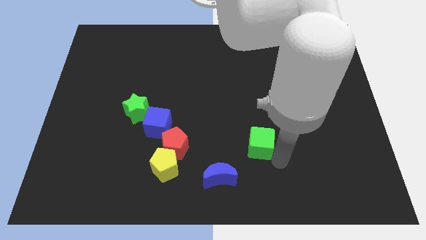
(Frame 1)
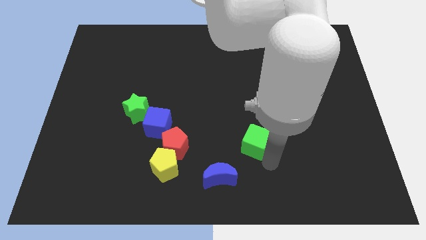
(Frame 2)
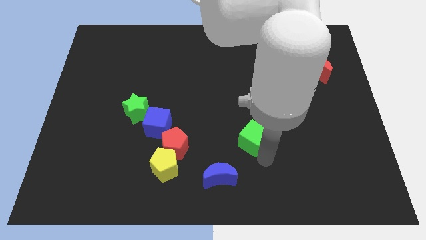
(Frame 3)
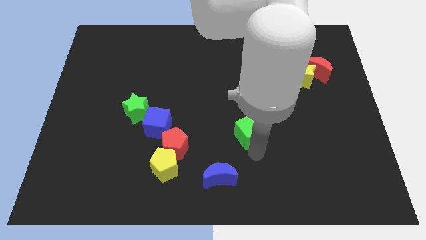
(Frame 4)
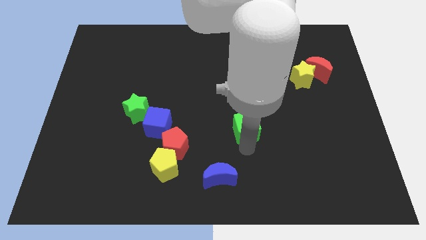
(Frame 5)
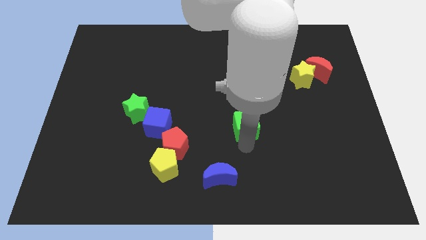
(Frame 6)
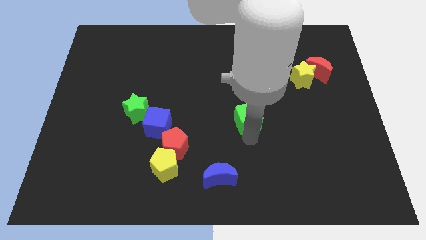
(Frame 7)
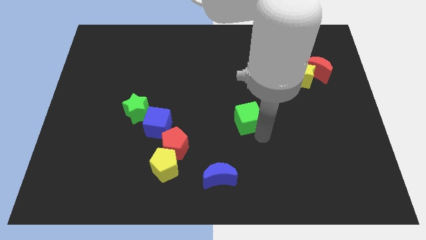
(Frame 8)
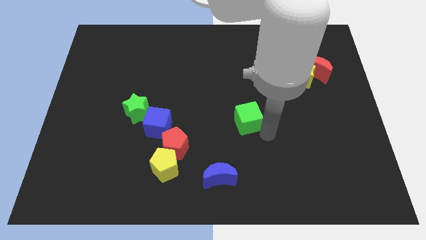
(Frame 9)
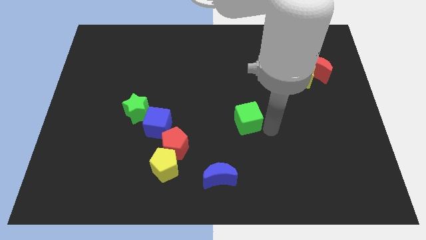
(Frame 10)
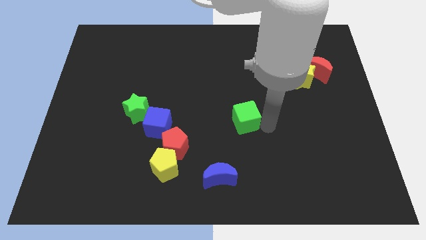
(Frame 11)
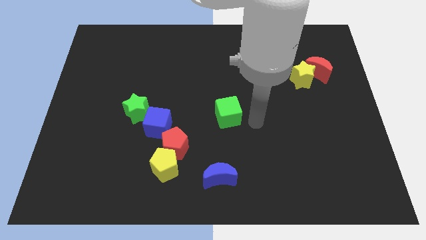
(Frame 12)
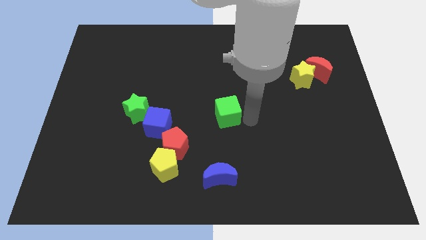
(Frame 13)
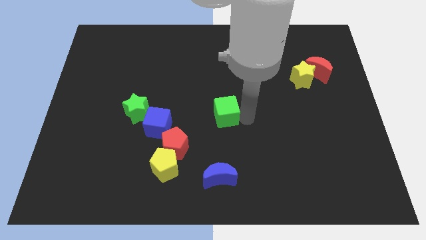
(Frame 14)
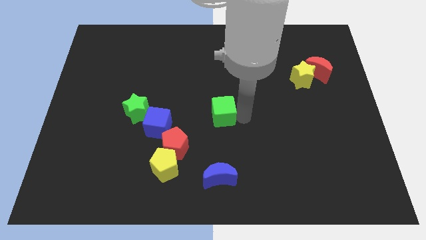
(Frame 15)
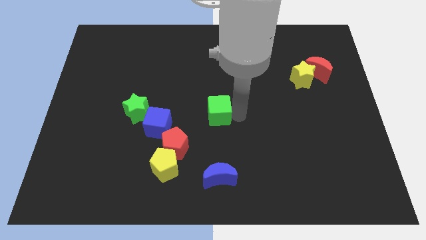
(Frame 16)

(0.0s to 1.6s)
place the green cube above the blue moon

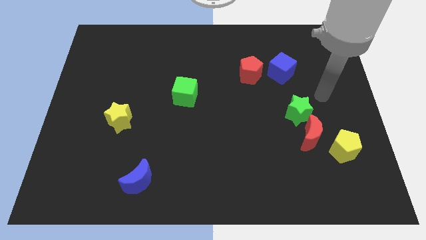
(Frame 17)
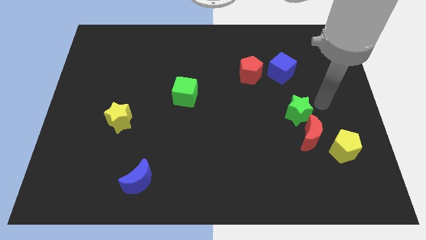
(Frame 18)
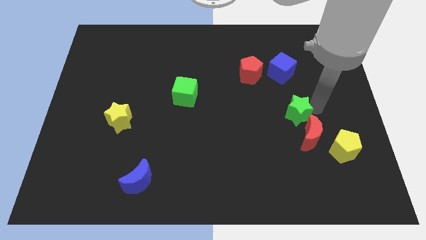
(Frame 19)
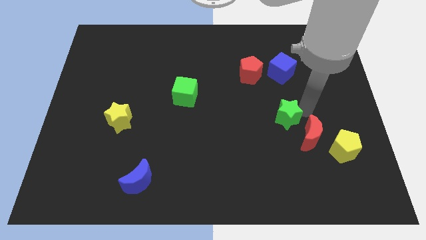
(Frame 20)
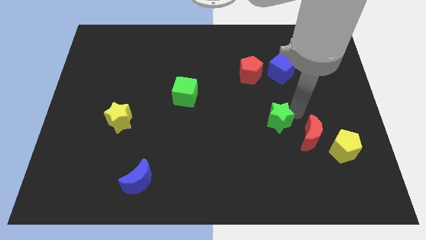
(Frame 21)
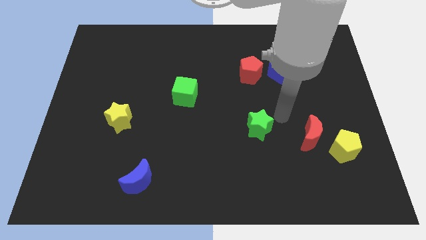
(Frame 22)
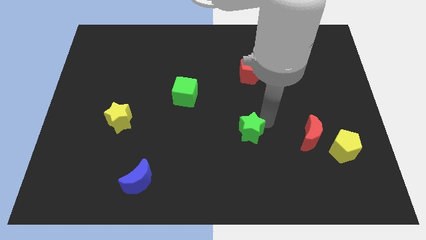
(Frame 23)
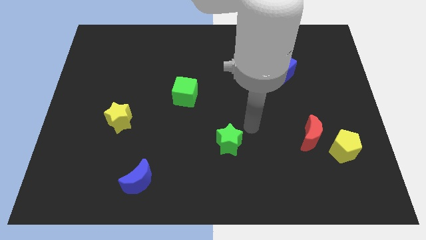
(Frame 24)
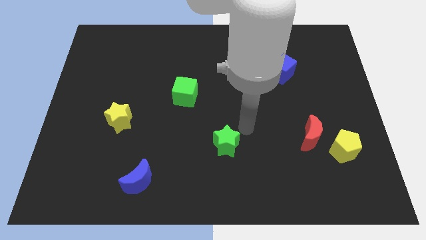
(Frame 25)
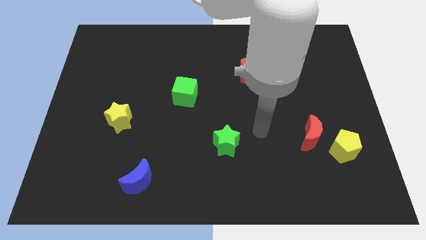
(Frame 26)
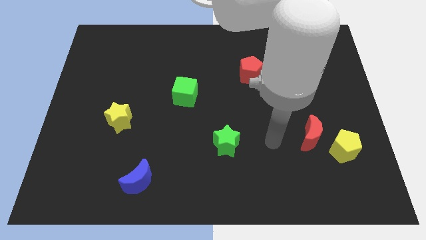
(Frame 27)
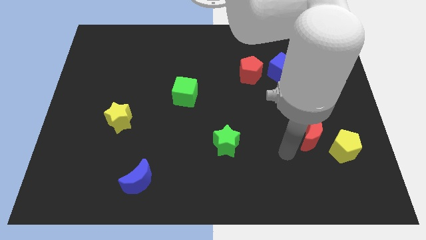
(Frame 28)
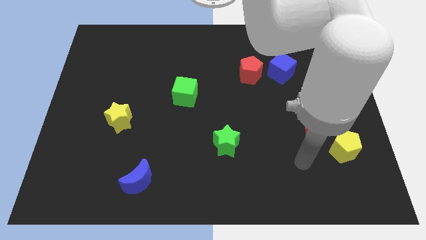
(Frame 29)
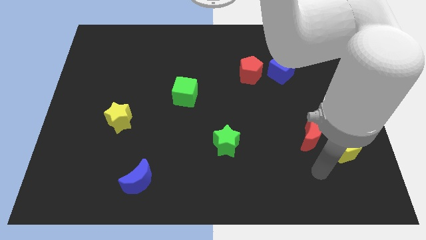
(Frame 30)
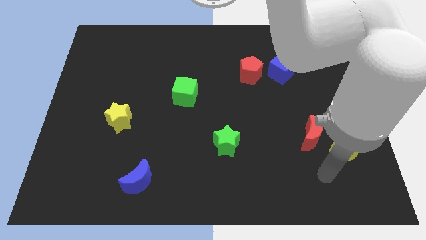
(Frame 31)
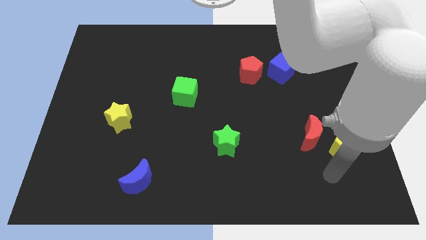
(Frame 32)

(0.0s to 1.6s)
separate the green star from the red crescent

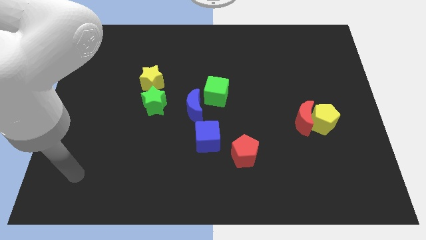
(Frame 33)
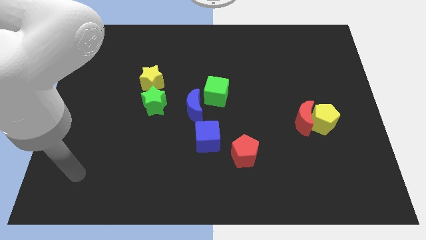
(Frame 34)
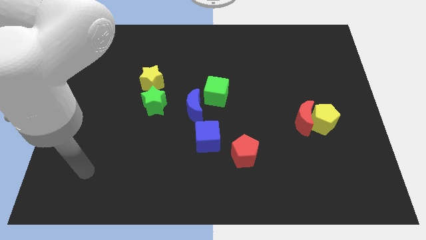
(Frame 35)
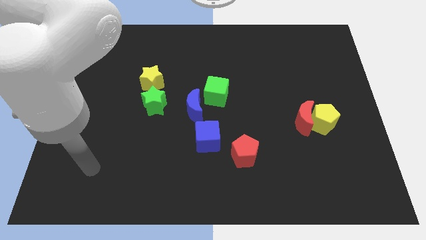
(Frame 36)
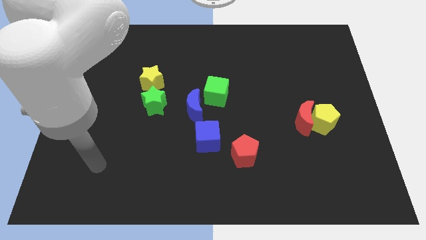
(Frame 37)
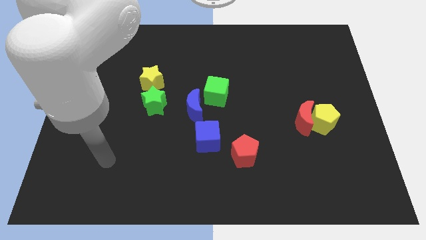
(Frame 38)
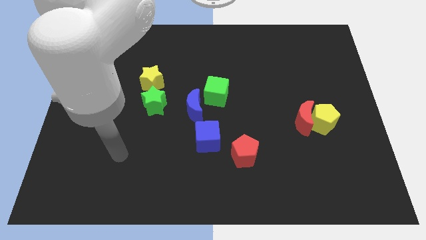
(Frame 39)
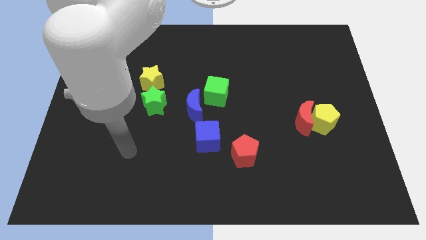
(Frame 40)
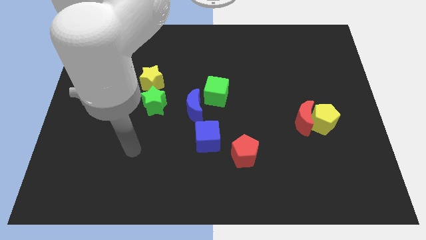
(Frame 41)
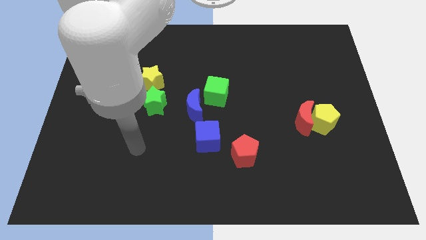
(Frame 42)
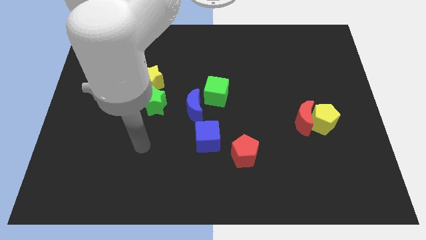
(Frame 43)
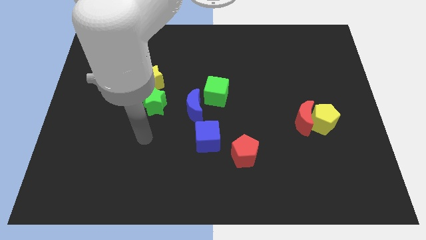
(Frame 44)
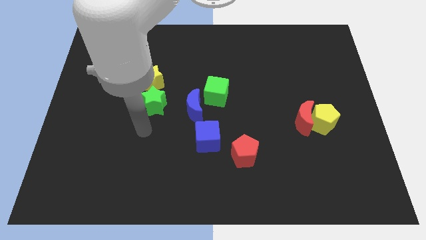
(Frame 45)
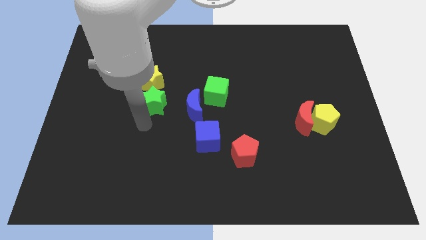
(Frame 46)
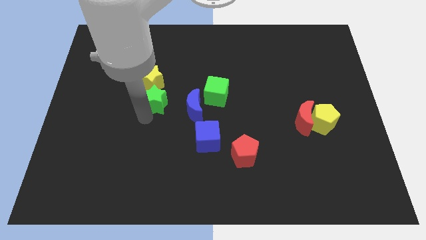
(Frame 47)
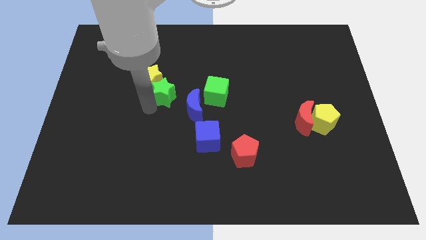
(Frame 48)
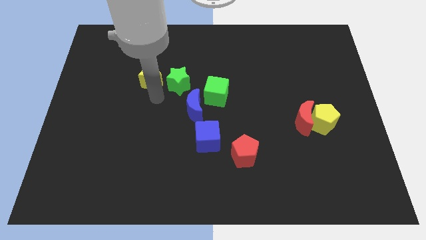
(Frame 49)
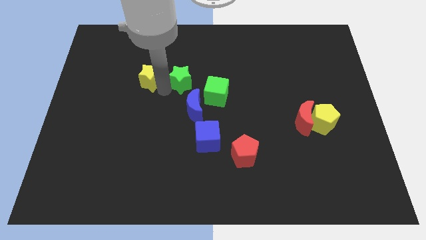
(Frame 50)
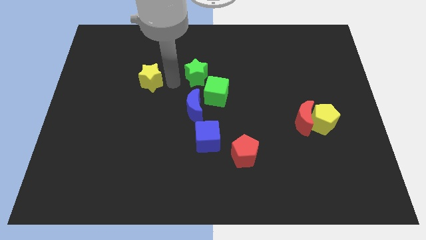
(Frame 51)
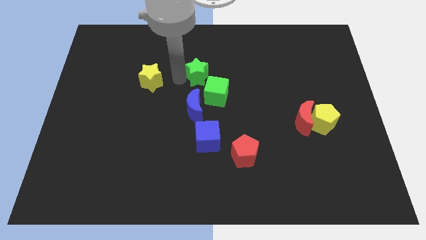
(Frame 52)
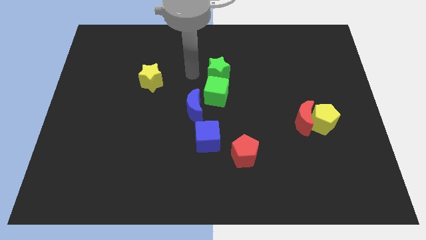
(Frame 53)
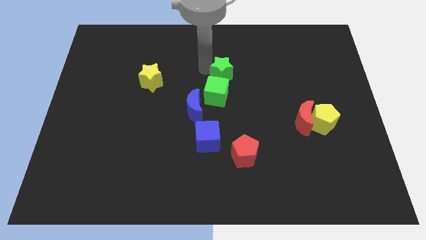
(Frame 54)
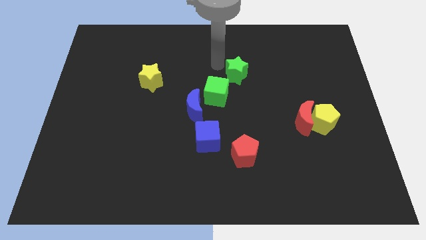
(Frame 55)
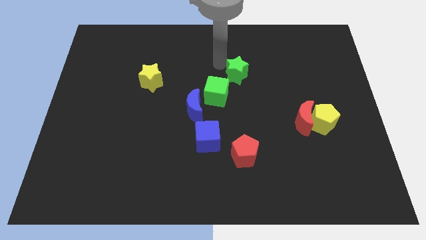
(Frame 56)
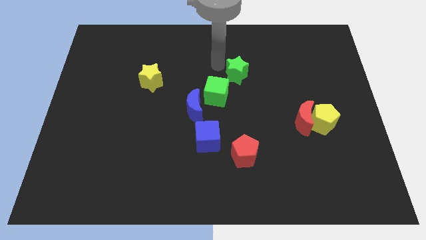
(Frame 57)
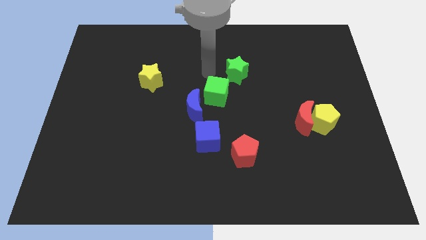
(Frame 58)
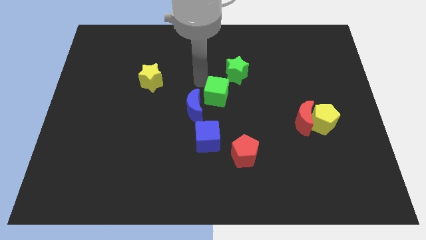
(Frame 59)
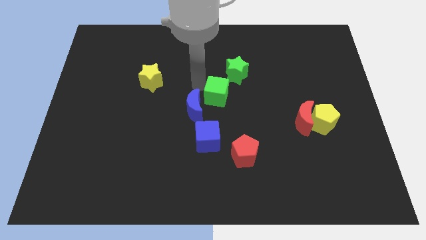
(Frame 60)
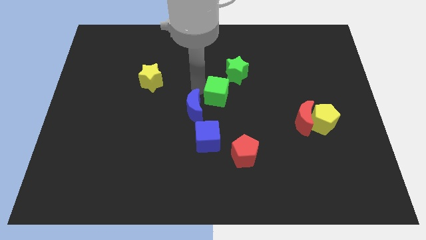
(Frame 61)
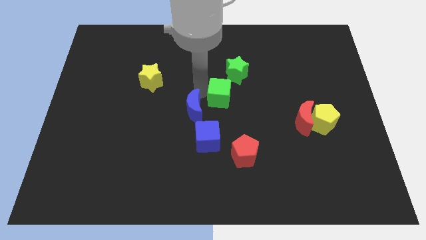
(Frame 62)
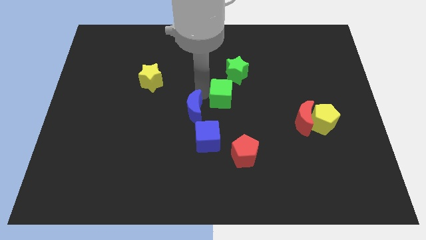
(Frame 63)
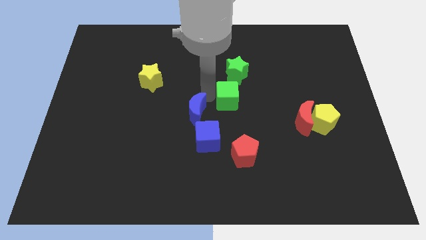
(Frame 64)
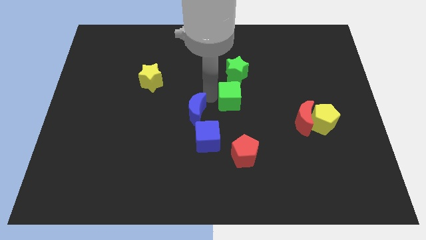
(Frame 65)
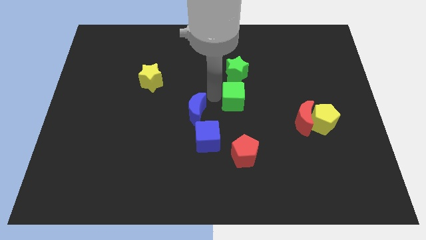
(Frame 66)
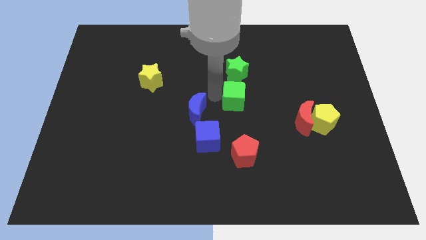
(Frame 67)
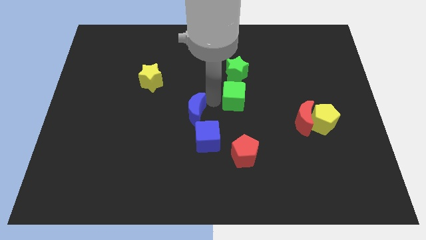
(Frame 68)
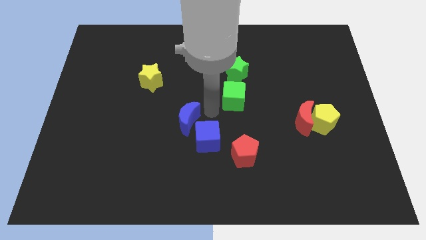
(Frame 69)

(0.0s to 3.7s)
move the green star and green cube vertical to each other

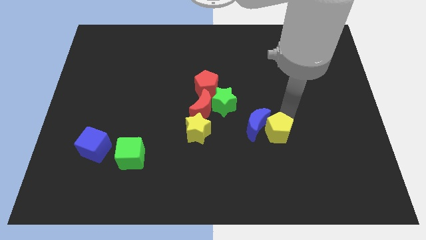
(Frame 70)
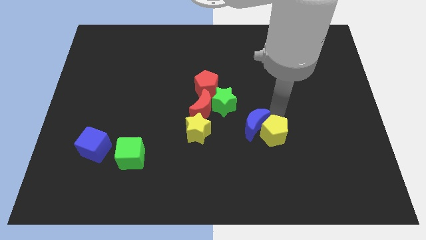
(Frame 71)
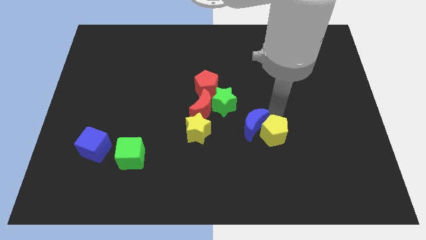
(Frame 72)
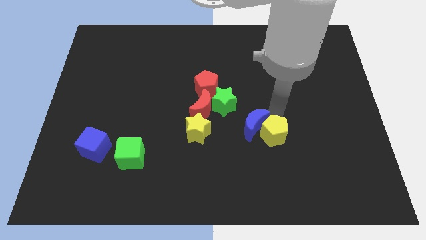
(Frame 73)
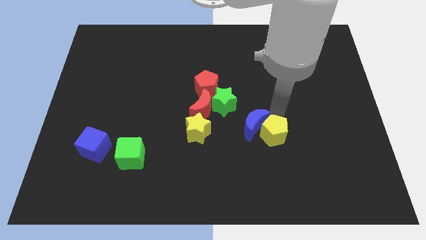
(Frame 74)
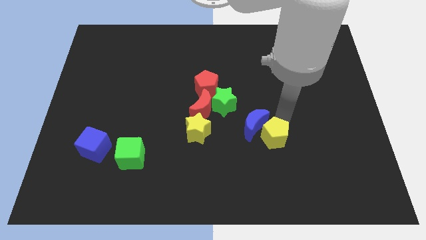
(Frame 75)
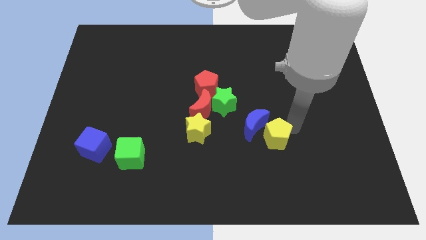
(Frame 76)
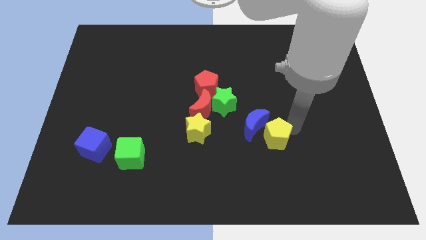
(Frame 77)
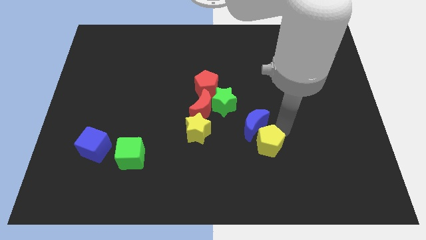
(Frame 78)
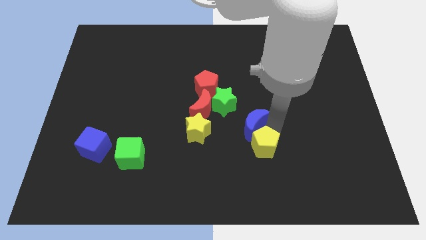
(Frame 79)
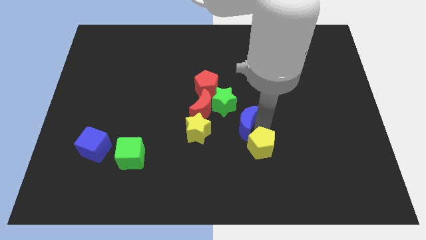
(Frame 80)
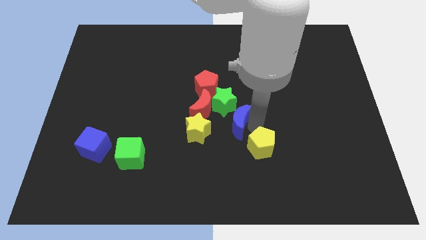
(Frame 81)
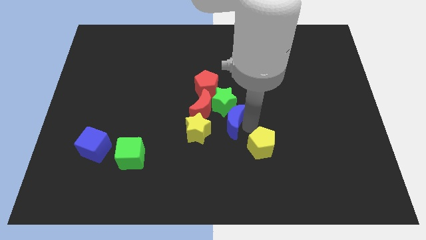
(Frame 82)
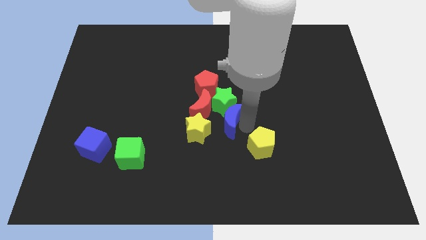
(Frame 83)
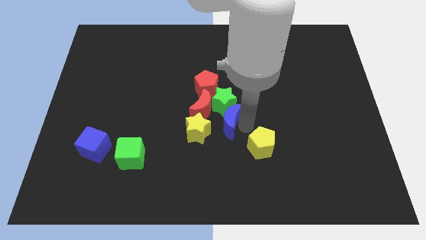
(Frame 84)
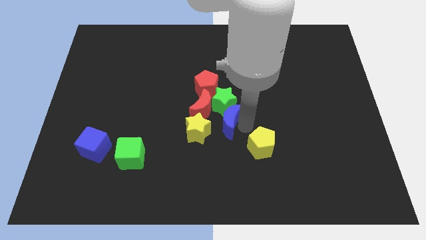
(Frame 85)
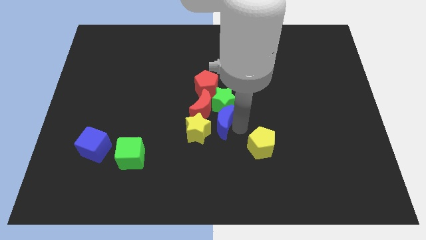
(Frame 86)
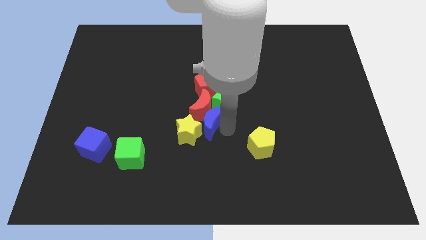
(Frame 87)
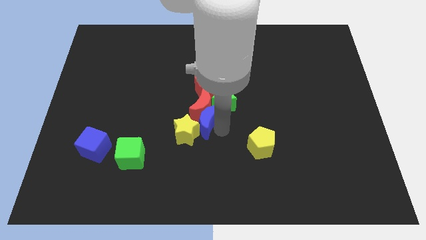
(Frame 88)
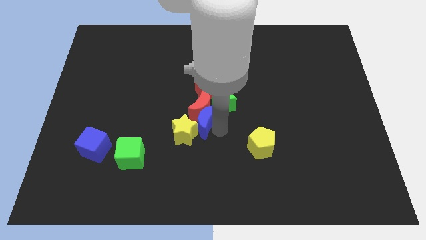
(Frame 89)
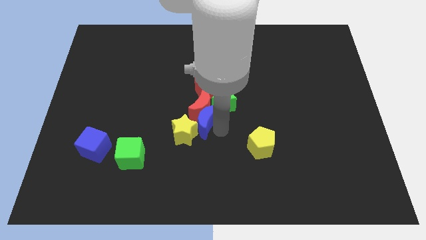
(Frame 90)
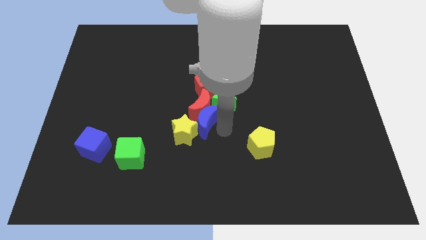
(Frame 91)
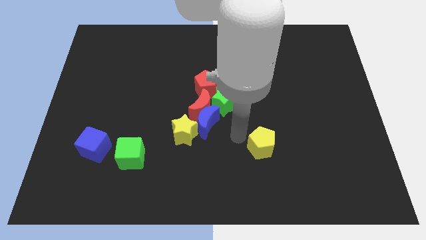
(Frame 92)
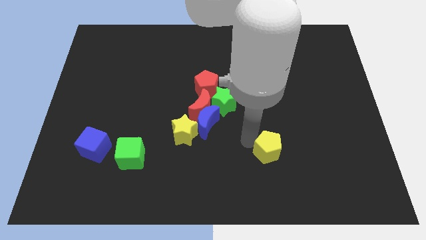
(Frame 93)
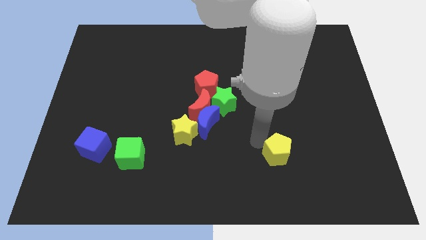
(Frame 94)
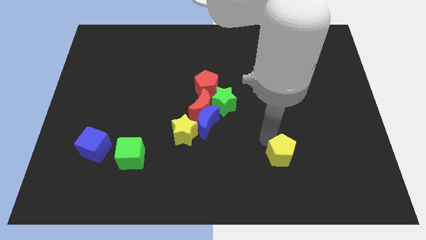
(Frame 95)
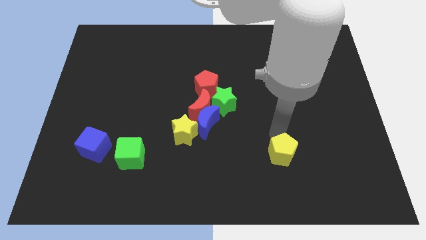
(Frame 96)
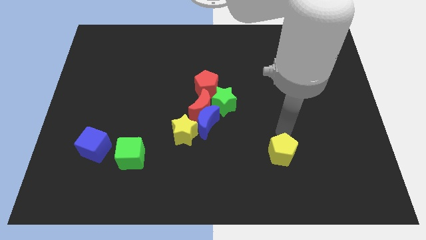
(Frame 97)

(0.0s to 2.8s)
push the blue moon into the red moon
